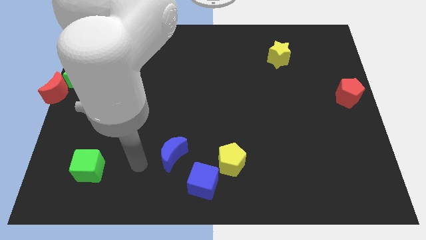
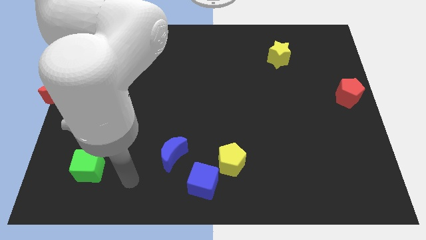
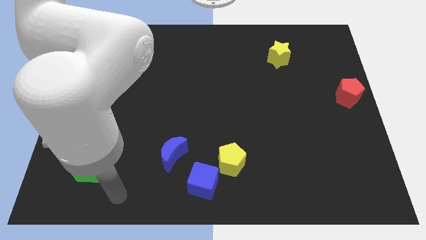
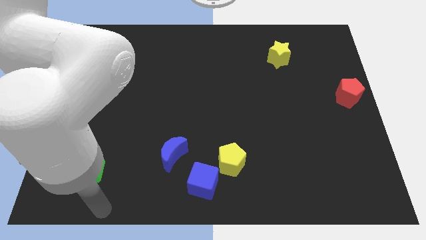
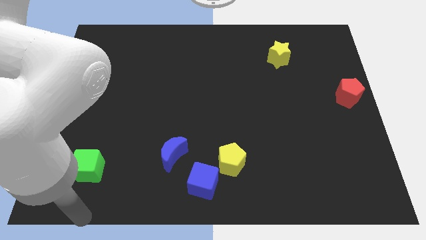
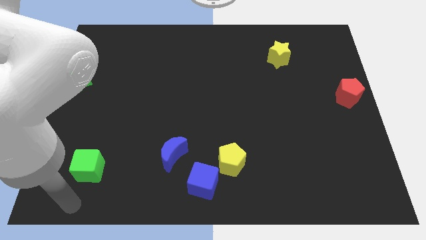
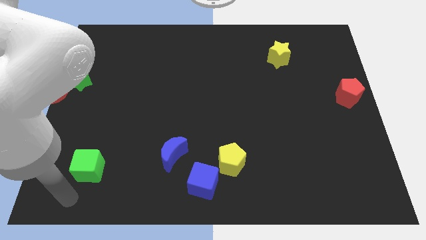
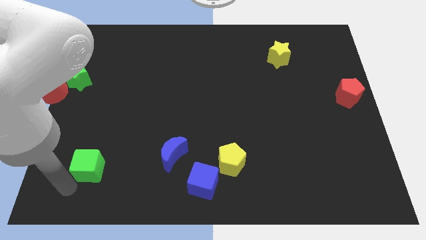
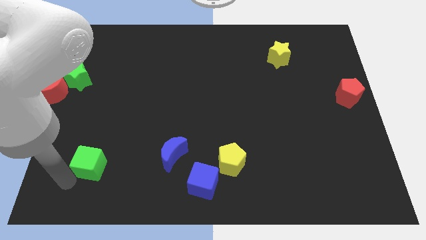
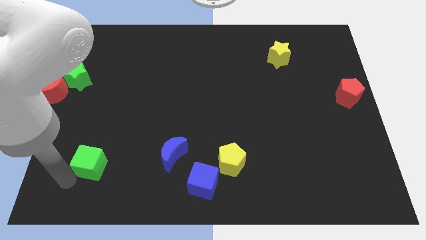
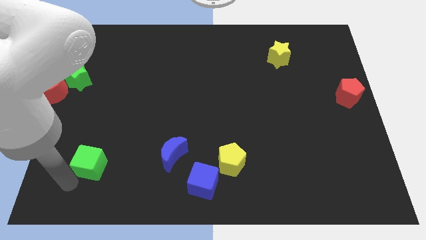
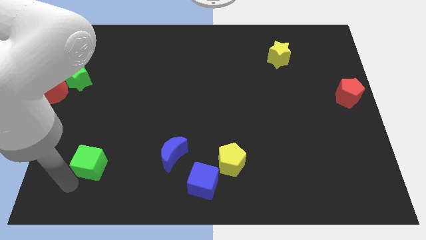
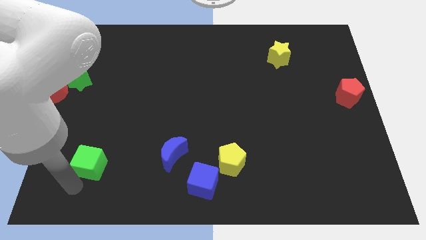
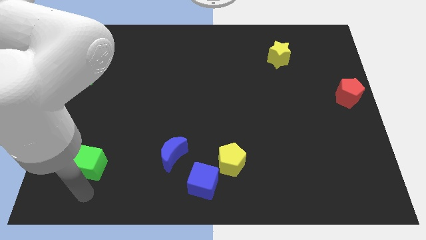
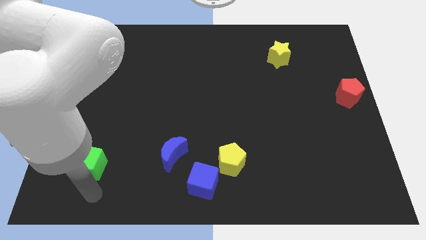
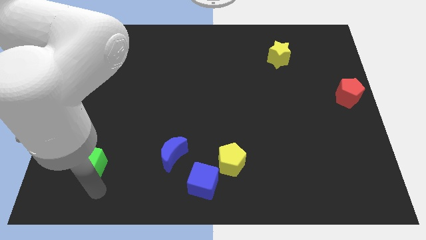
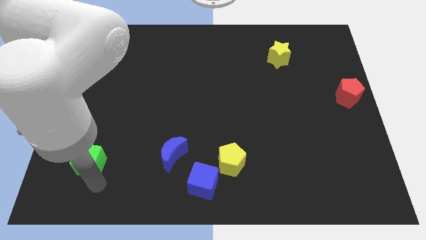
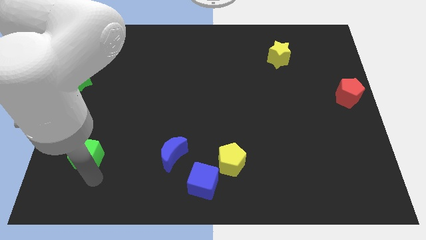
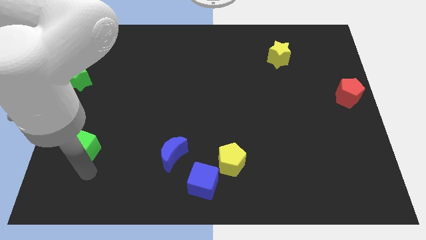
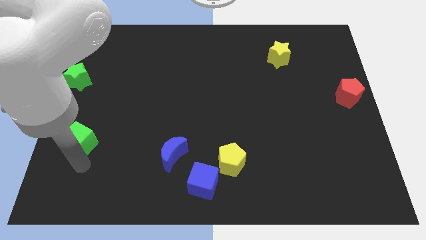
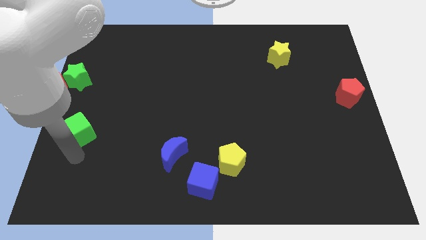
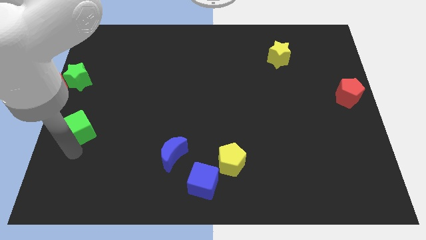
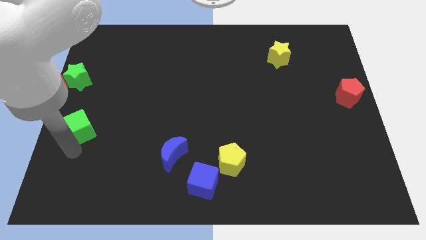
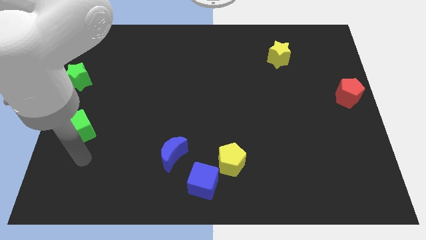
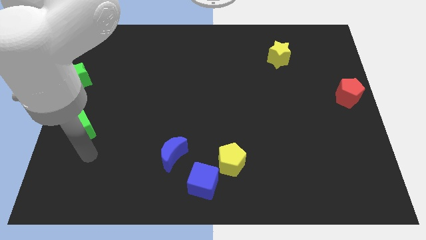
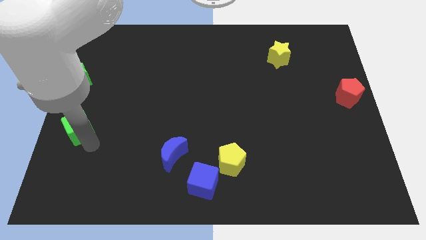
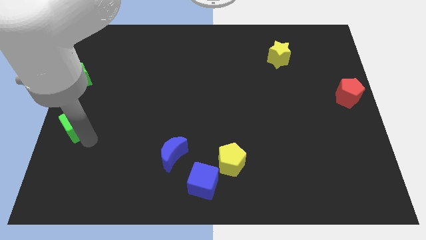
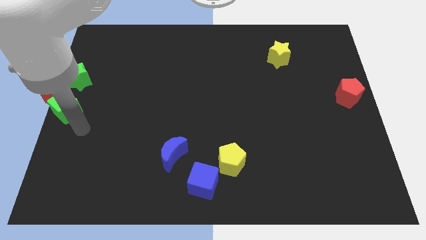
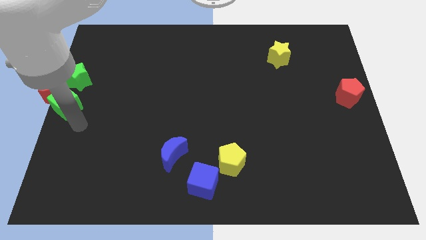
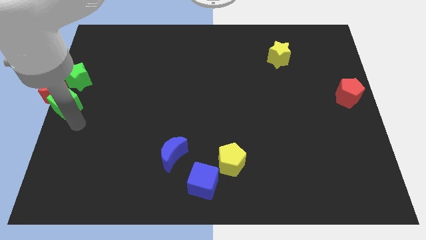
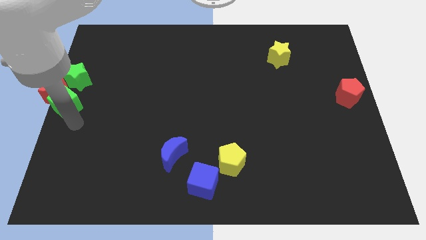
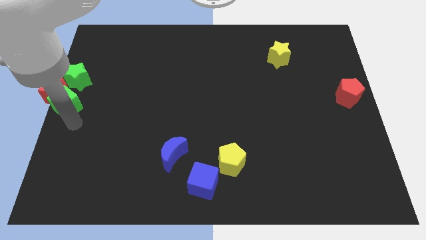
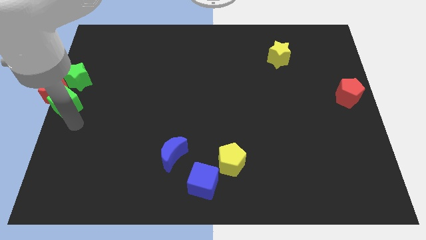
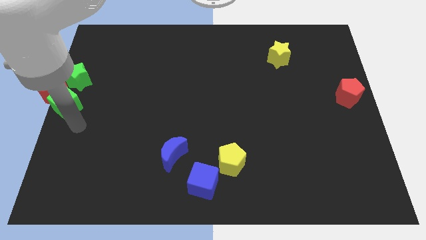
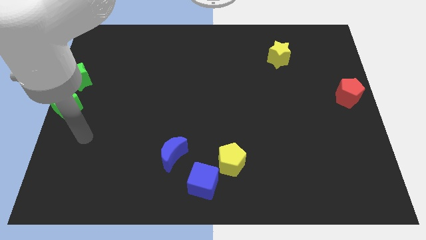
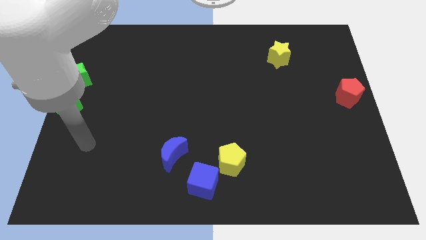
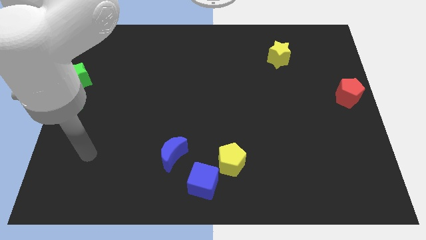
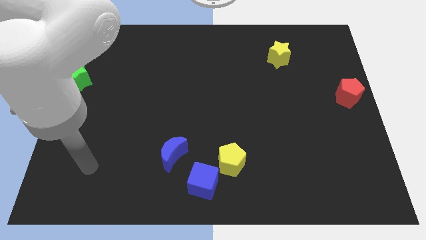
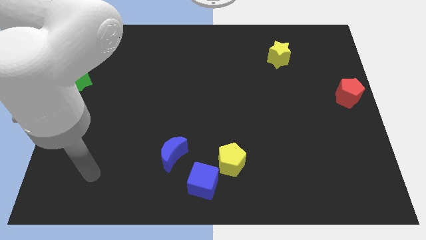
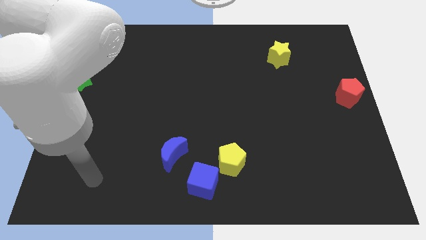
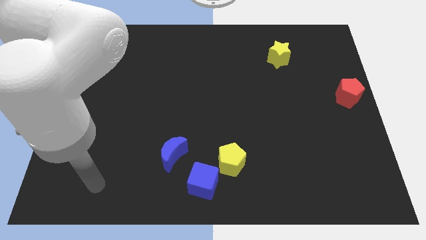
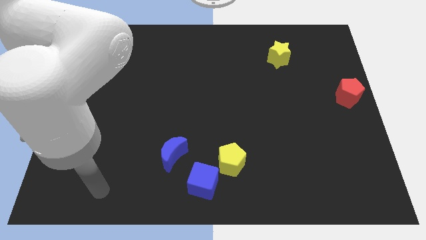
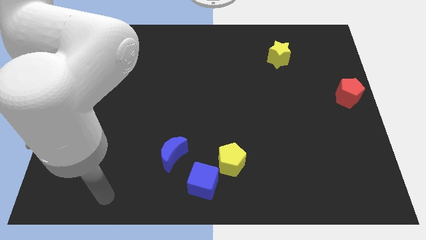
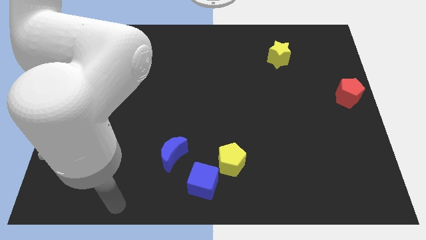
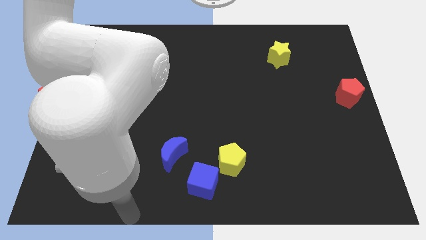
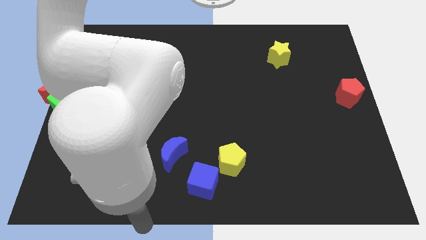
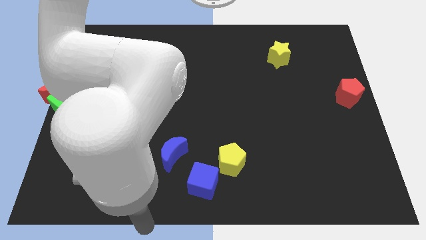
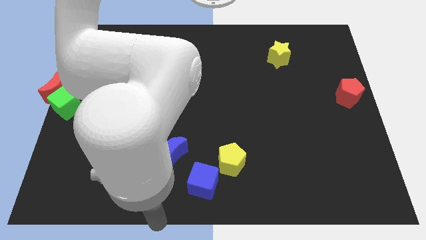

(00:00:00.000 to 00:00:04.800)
attach the green cube to the red moon

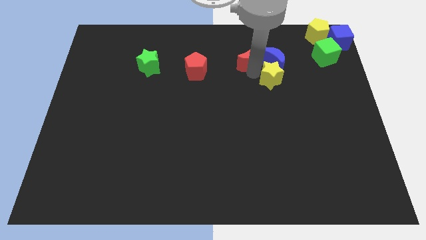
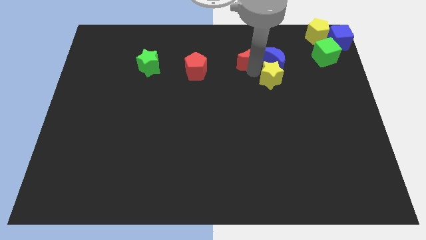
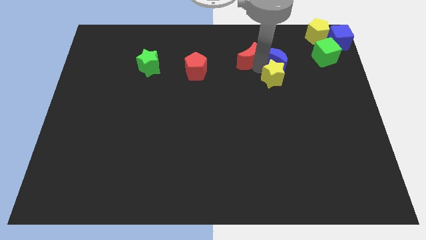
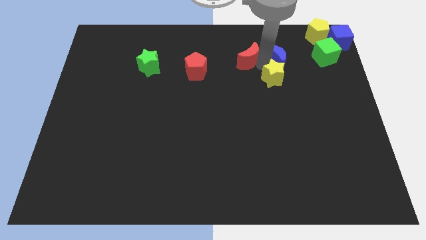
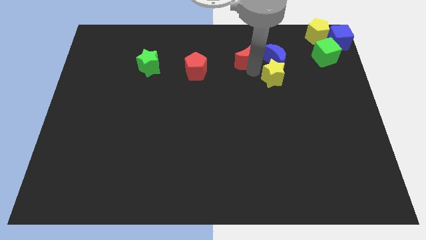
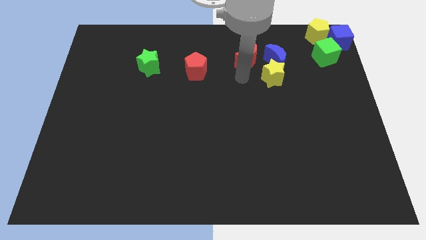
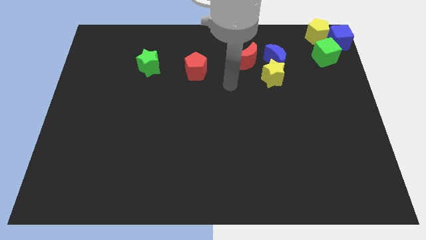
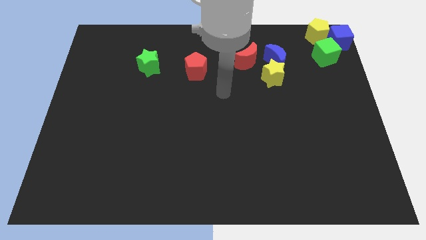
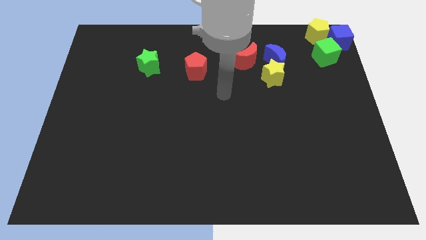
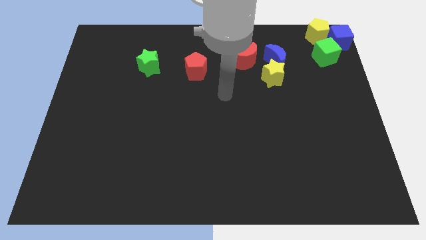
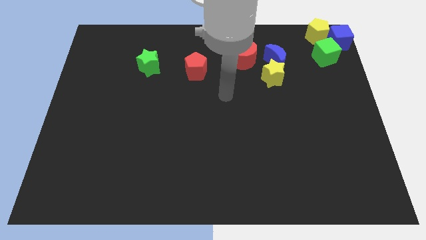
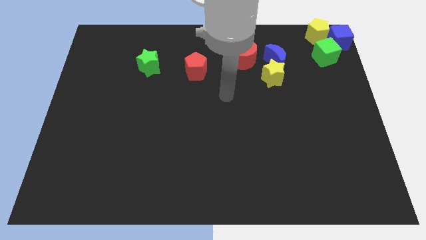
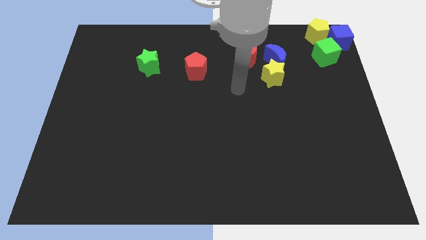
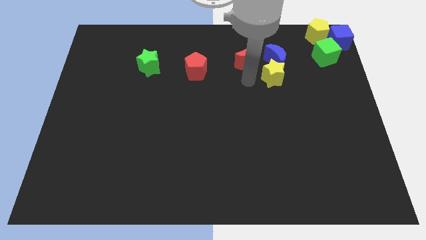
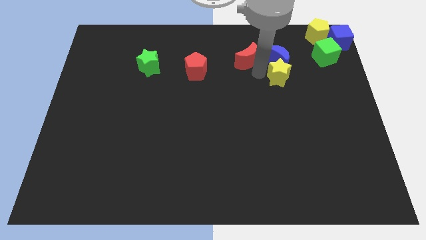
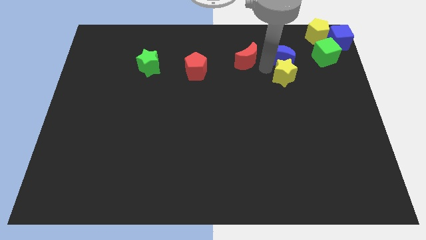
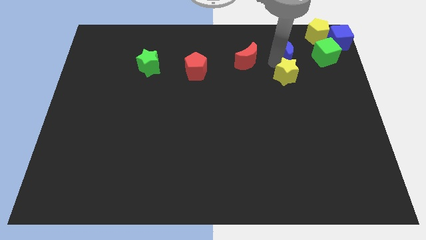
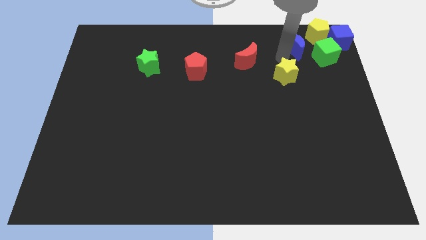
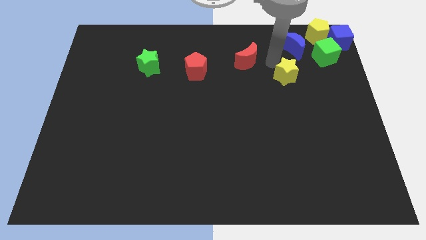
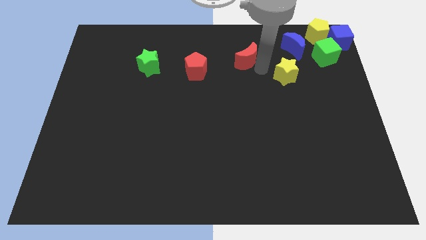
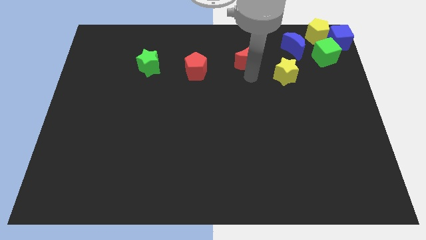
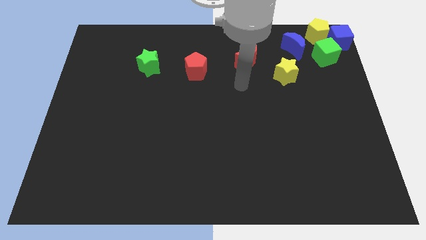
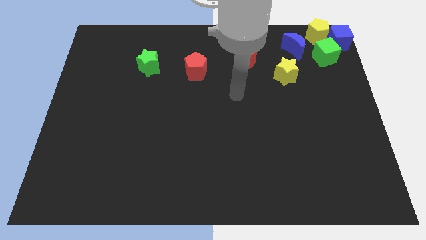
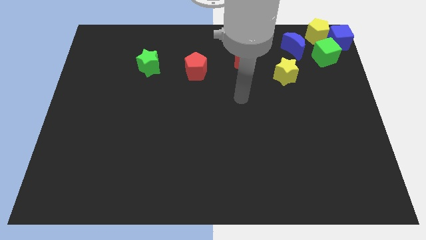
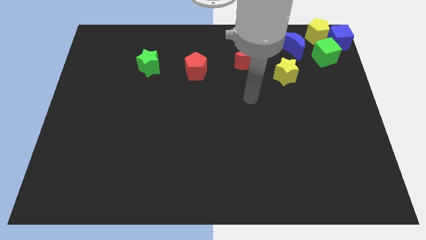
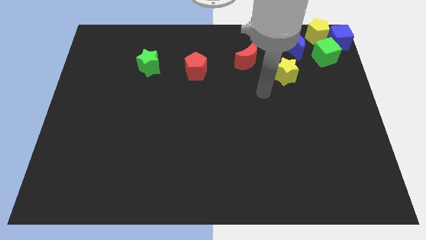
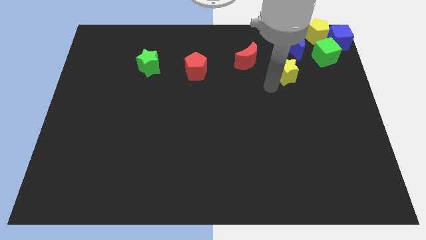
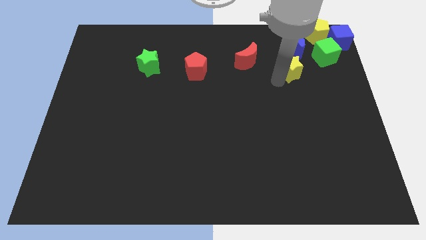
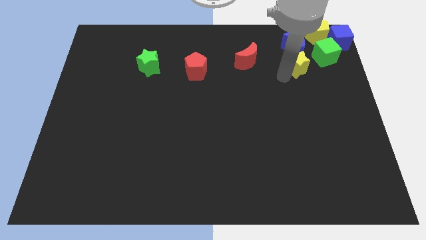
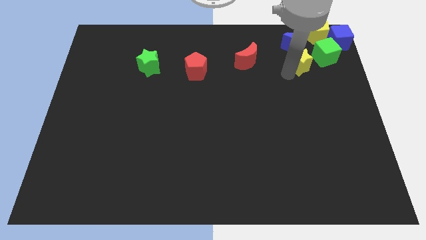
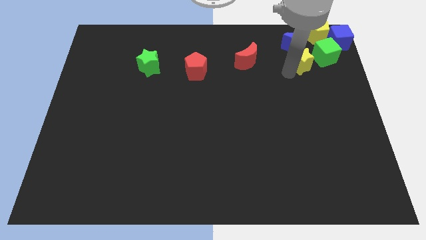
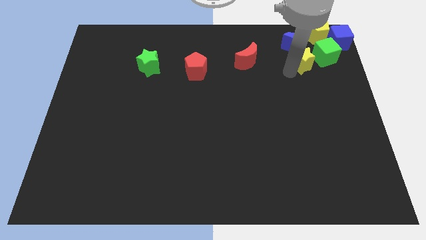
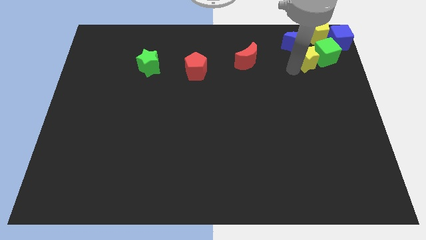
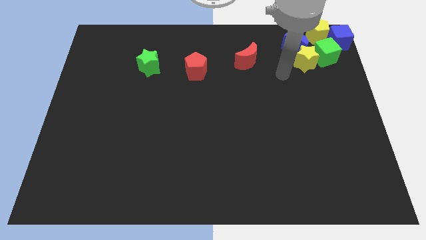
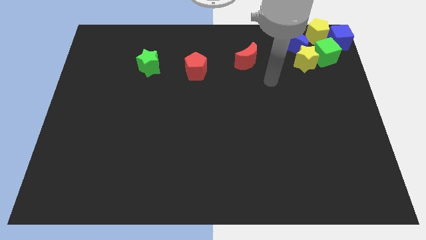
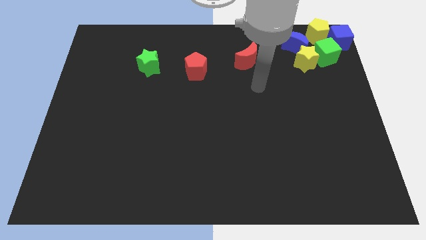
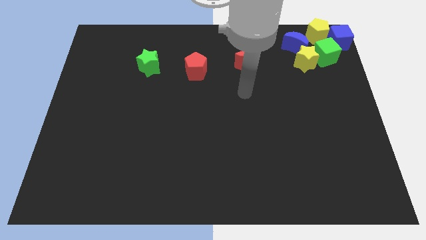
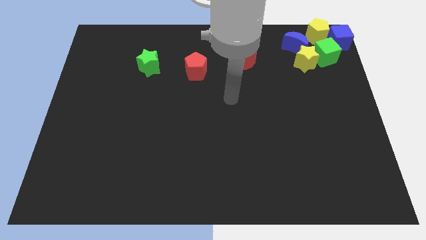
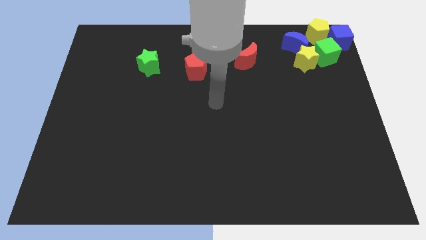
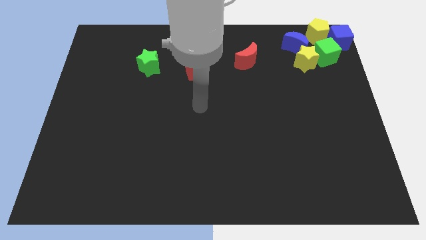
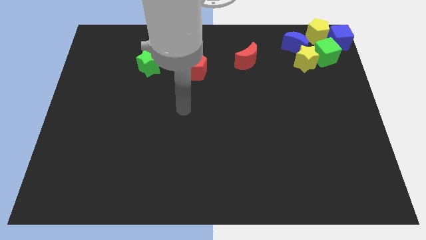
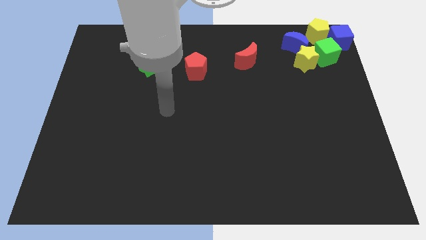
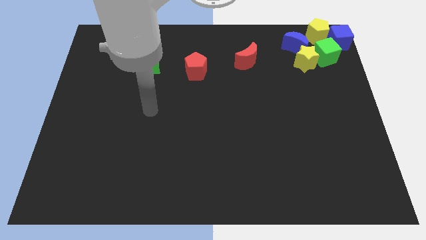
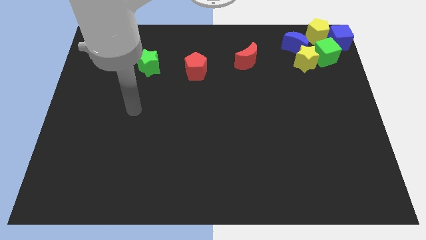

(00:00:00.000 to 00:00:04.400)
move the blue crescent to the top right of the board
